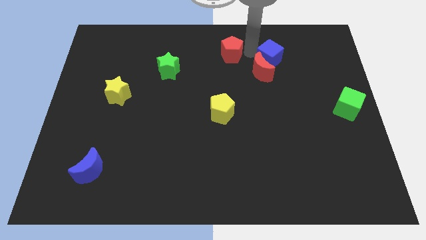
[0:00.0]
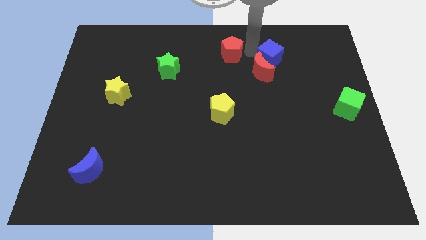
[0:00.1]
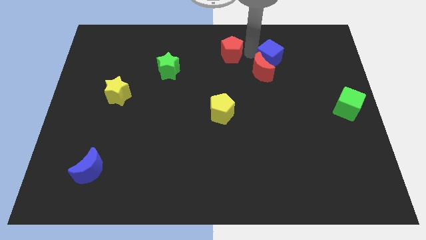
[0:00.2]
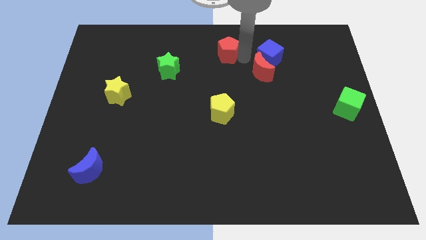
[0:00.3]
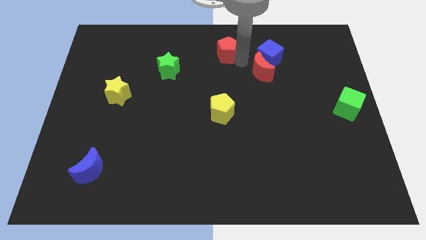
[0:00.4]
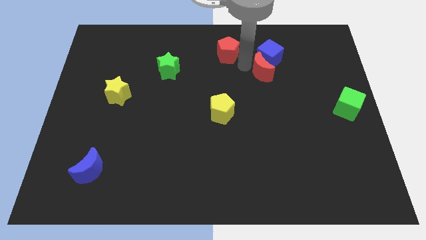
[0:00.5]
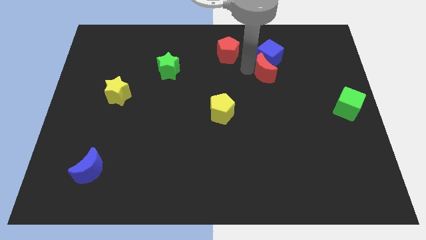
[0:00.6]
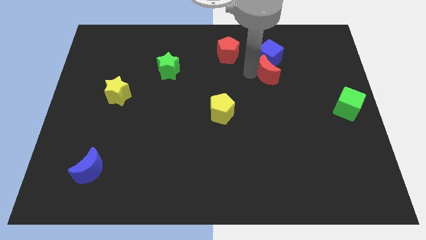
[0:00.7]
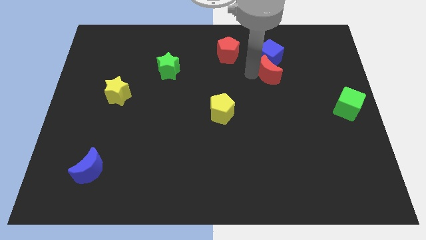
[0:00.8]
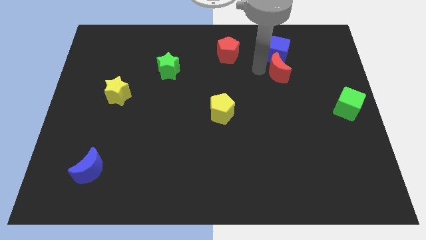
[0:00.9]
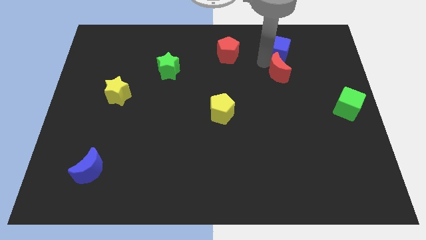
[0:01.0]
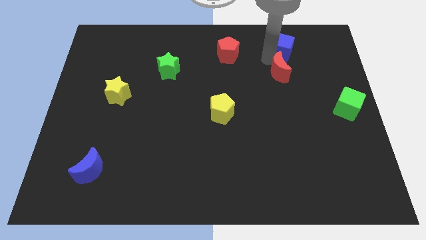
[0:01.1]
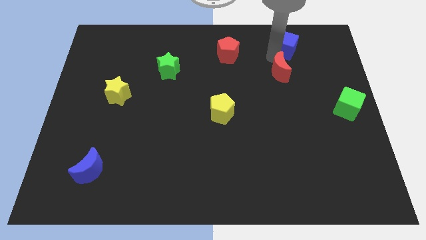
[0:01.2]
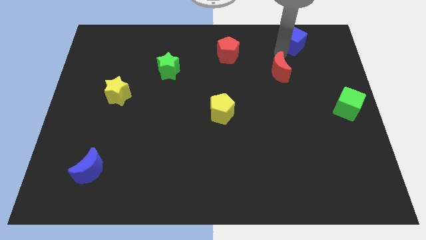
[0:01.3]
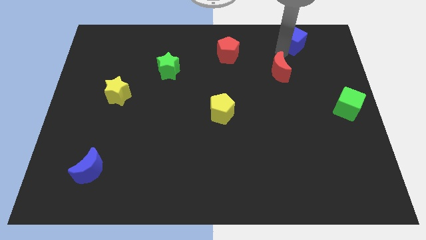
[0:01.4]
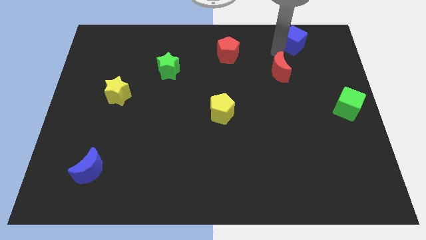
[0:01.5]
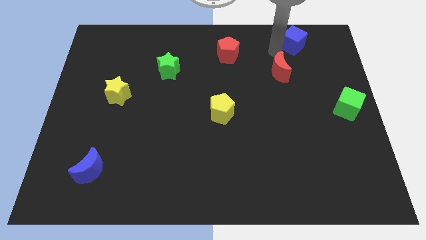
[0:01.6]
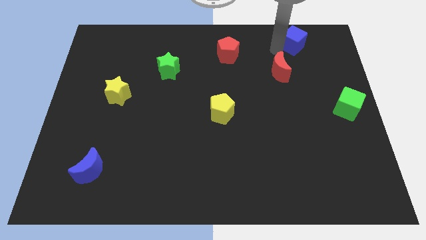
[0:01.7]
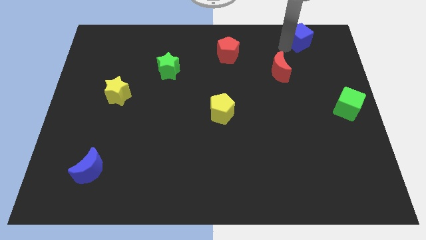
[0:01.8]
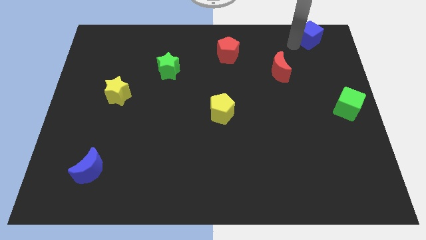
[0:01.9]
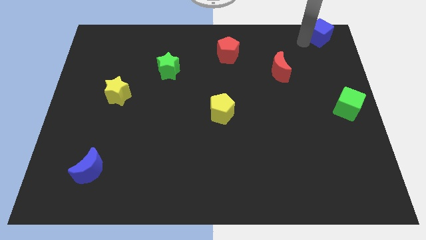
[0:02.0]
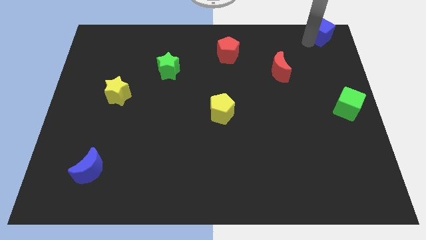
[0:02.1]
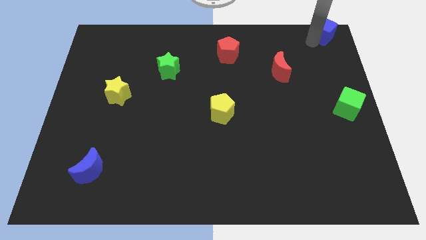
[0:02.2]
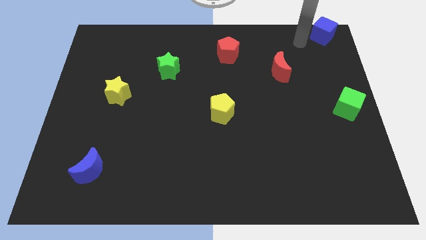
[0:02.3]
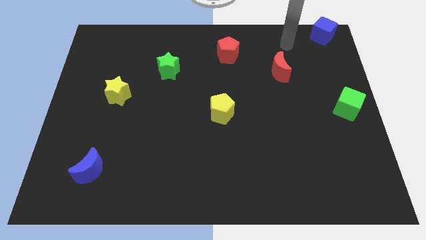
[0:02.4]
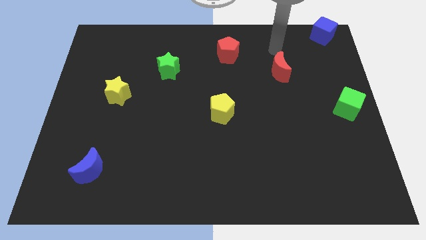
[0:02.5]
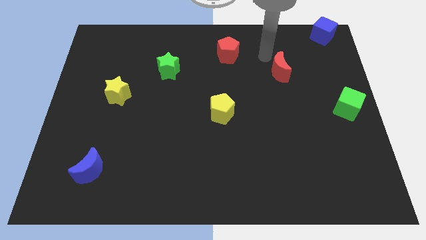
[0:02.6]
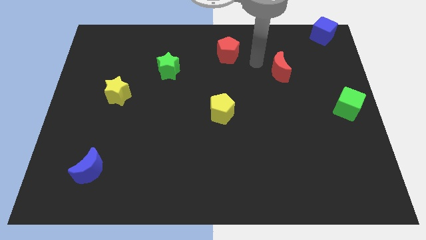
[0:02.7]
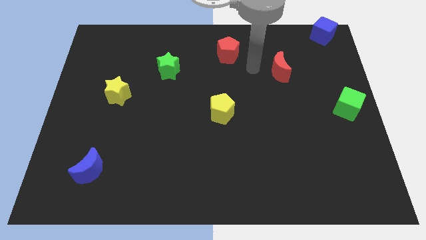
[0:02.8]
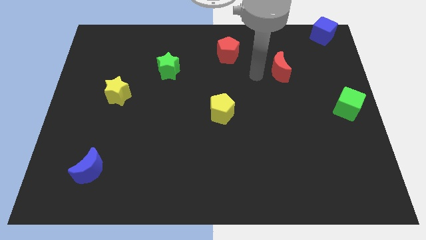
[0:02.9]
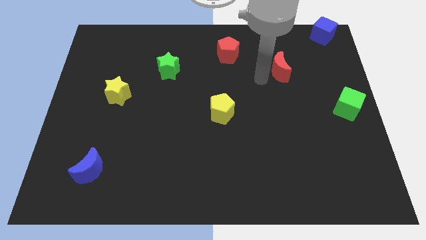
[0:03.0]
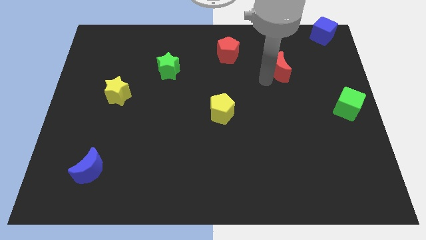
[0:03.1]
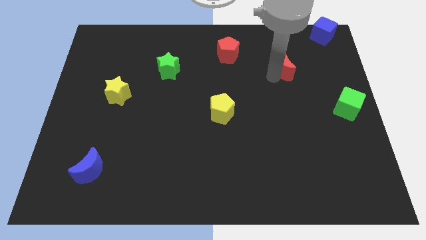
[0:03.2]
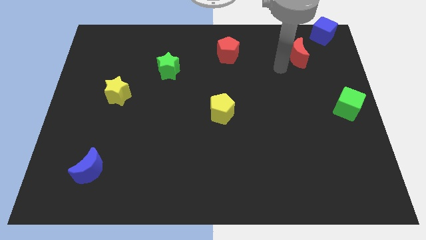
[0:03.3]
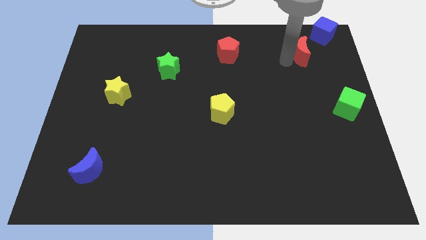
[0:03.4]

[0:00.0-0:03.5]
separate the blue cube from the red moon

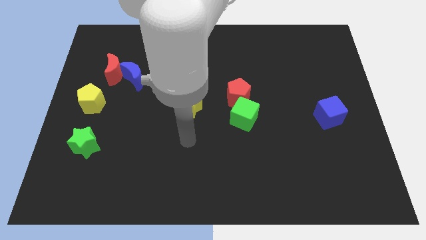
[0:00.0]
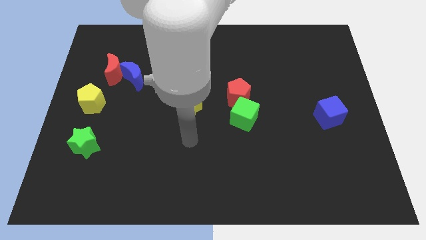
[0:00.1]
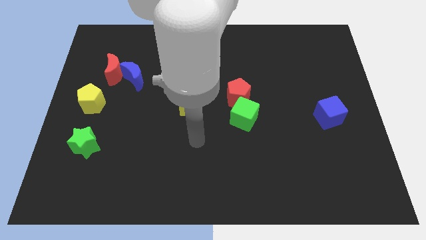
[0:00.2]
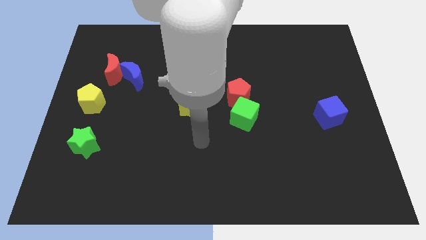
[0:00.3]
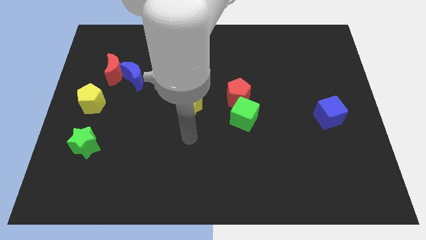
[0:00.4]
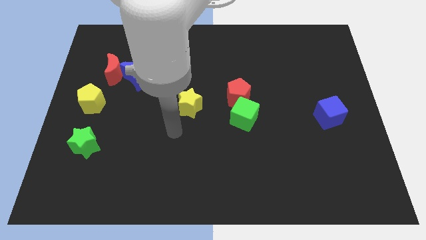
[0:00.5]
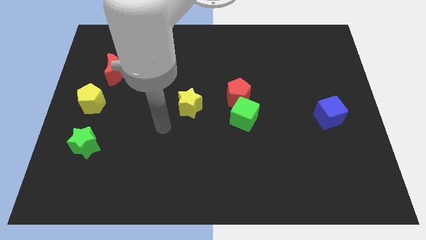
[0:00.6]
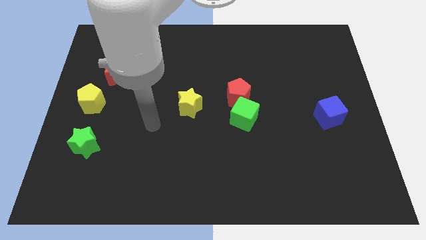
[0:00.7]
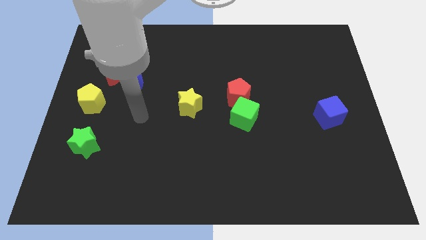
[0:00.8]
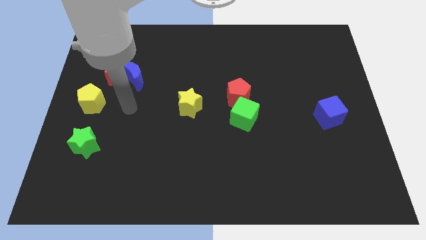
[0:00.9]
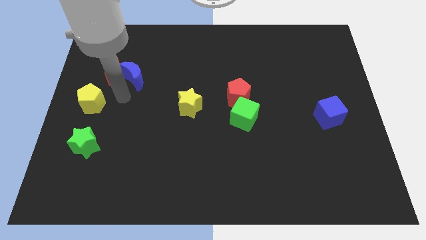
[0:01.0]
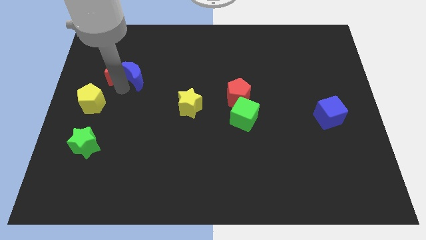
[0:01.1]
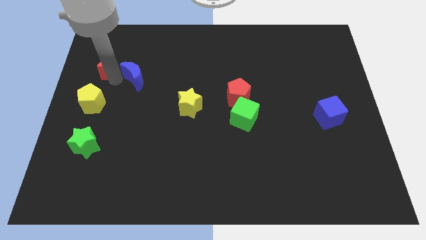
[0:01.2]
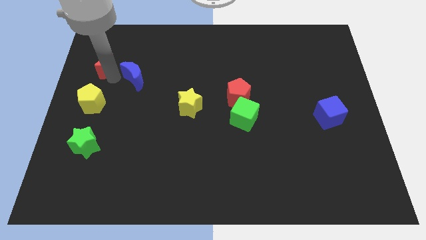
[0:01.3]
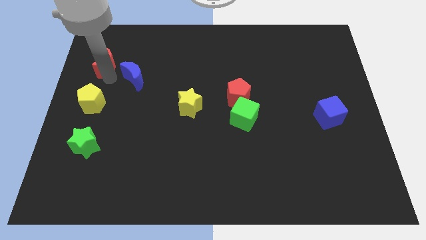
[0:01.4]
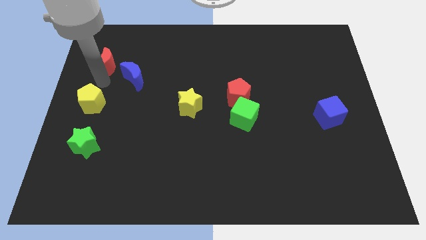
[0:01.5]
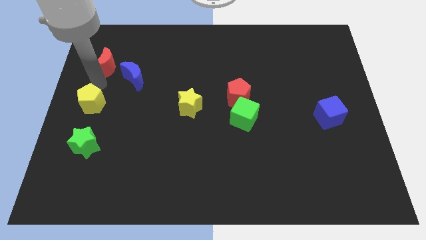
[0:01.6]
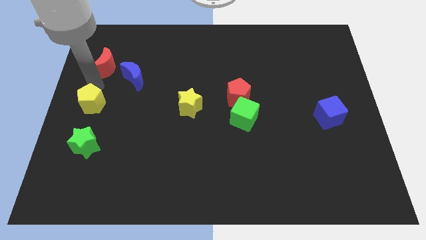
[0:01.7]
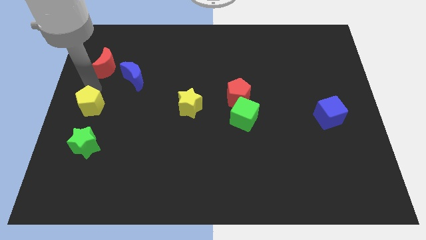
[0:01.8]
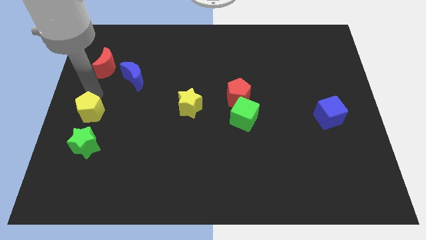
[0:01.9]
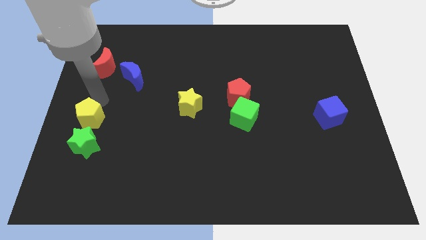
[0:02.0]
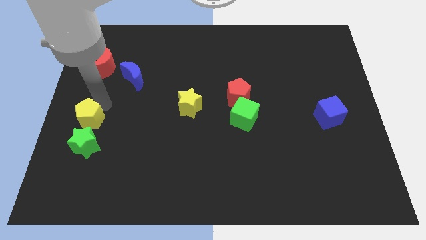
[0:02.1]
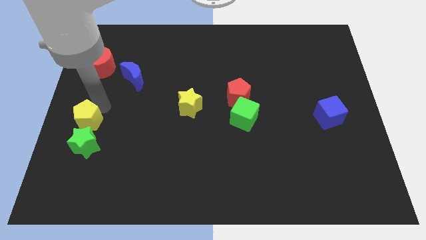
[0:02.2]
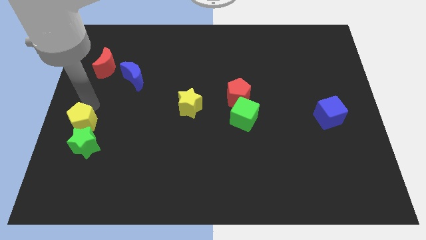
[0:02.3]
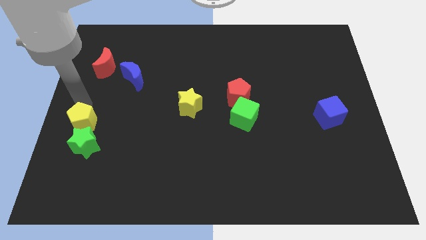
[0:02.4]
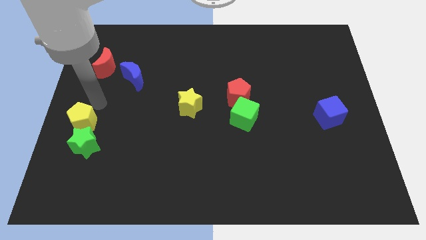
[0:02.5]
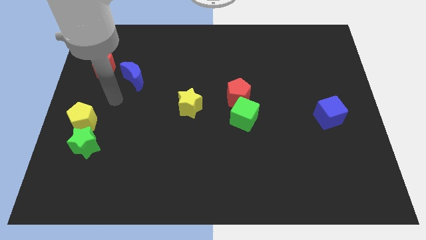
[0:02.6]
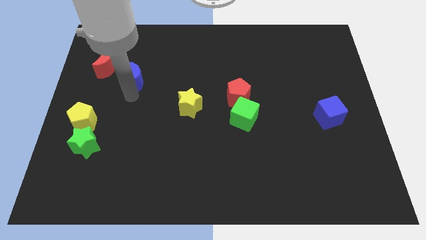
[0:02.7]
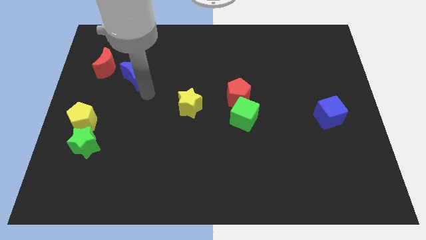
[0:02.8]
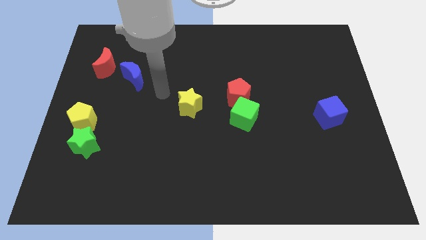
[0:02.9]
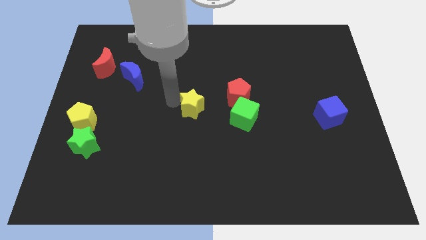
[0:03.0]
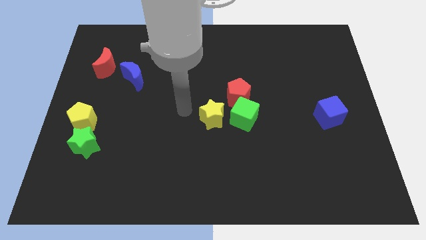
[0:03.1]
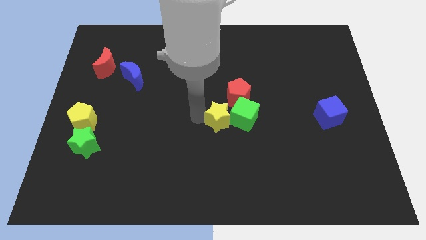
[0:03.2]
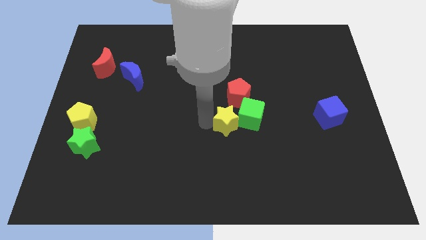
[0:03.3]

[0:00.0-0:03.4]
slightly move the yellow pentagon and yellow star towards the bottom

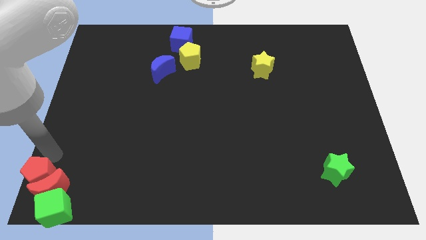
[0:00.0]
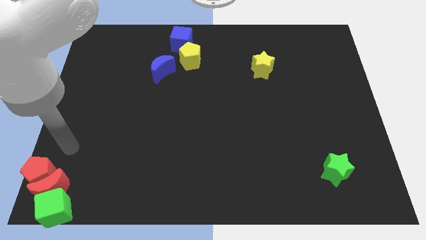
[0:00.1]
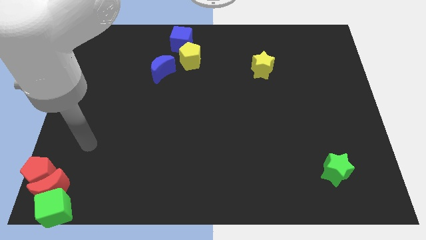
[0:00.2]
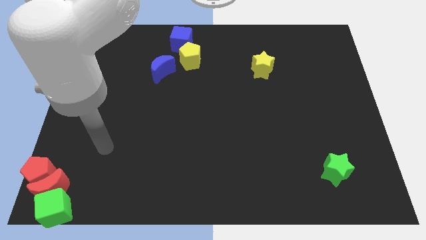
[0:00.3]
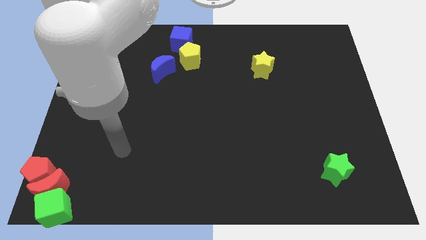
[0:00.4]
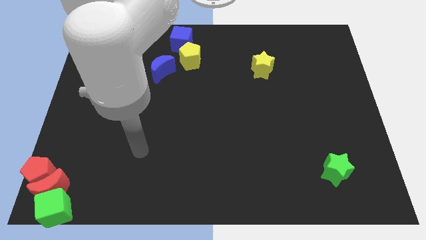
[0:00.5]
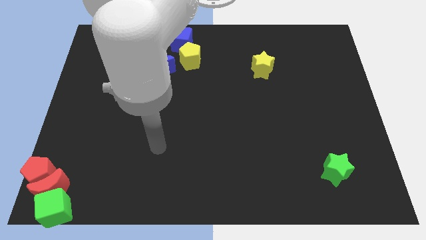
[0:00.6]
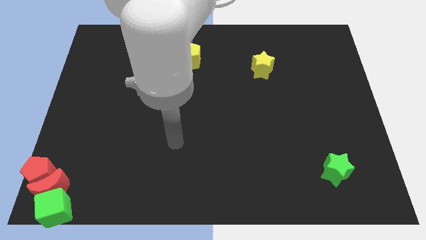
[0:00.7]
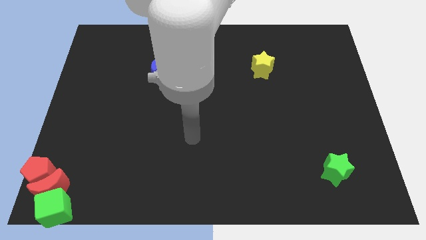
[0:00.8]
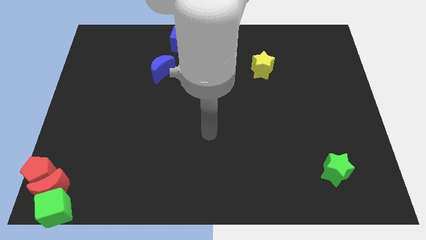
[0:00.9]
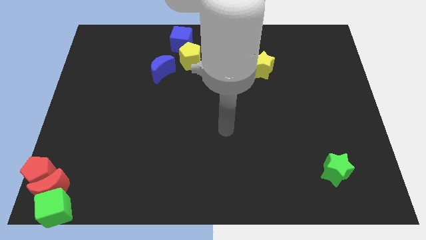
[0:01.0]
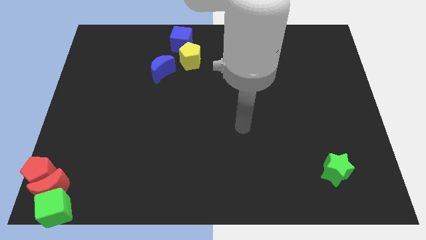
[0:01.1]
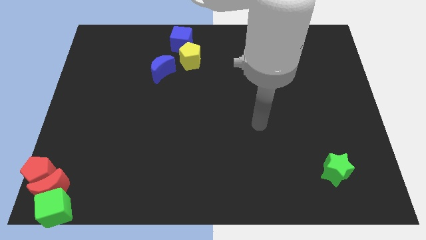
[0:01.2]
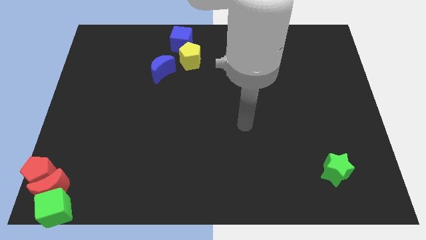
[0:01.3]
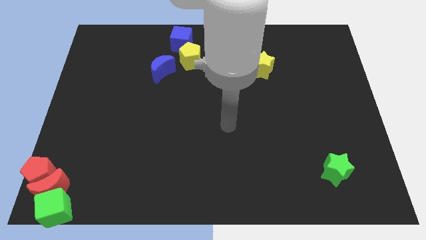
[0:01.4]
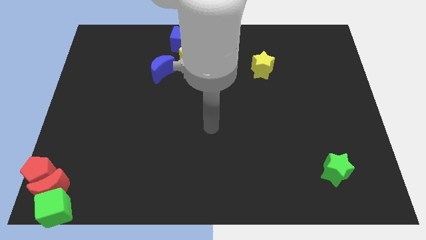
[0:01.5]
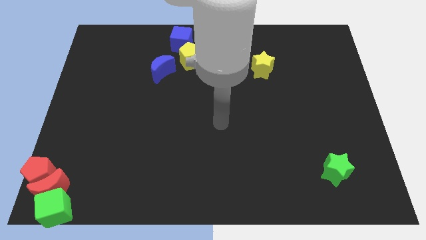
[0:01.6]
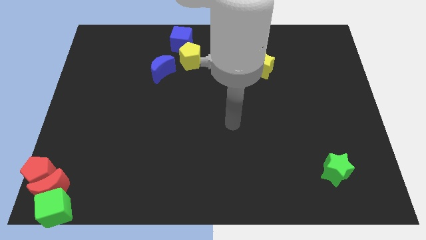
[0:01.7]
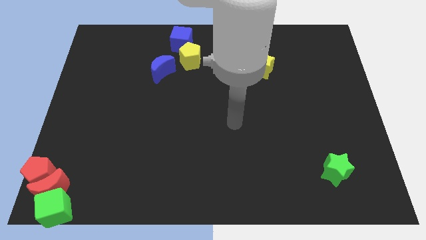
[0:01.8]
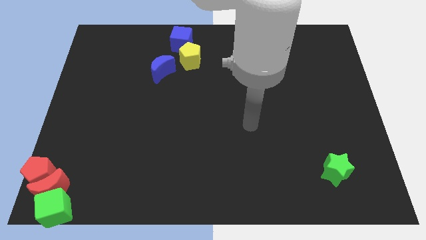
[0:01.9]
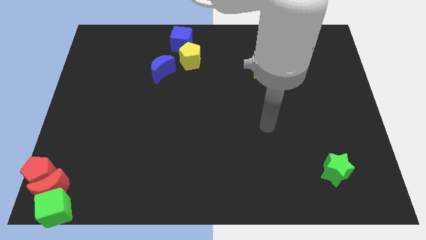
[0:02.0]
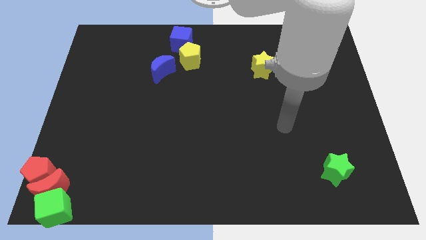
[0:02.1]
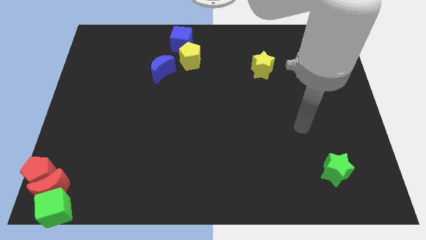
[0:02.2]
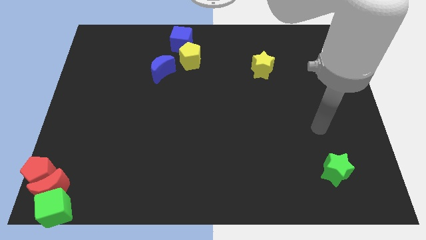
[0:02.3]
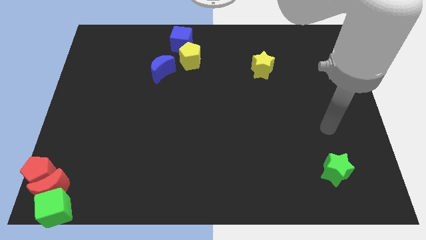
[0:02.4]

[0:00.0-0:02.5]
move your arm towards the right side of the board
